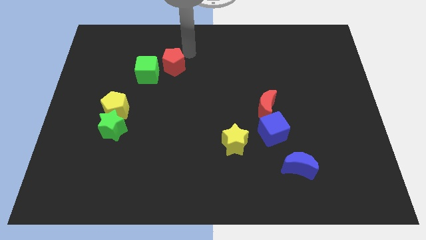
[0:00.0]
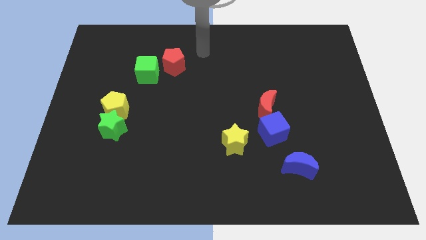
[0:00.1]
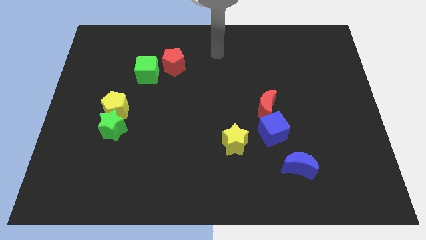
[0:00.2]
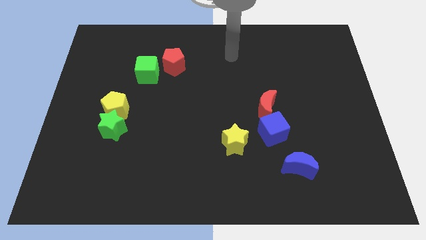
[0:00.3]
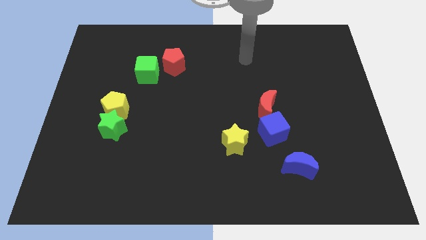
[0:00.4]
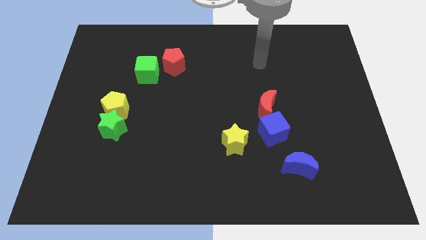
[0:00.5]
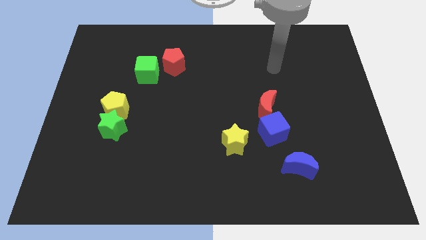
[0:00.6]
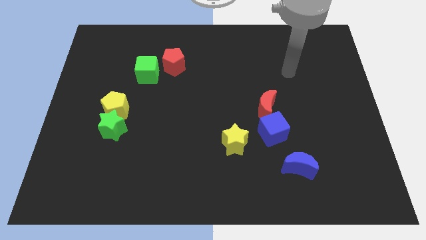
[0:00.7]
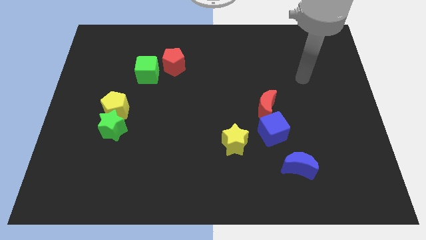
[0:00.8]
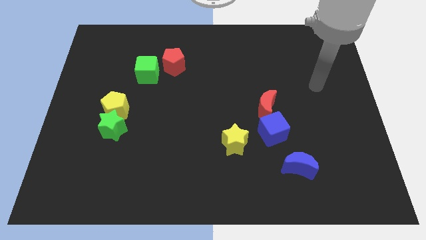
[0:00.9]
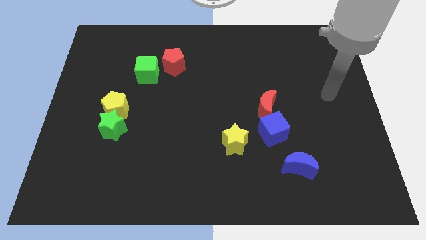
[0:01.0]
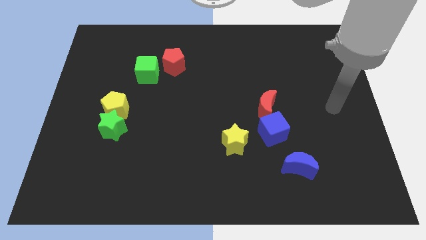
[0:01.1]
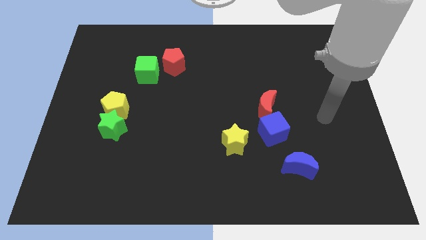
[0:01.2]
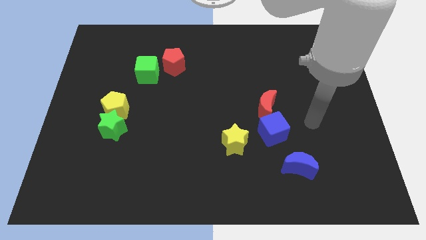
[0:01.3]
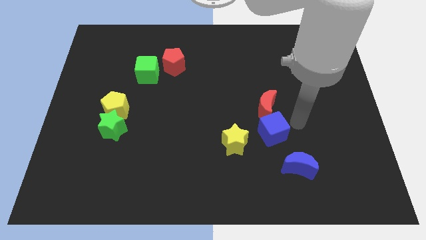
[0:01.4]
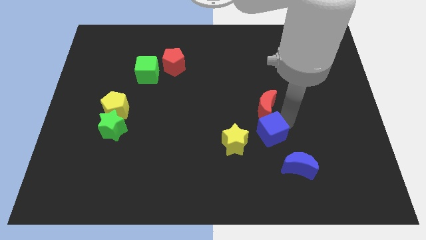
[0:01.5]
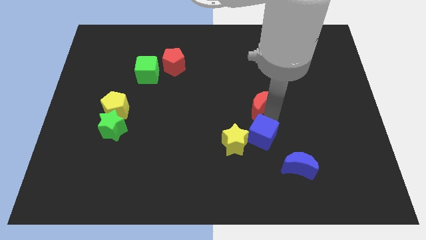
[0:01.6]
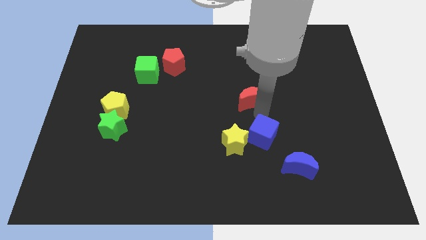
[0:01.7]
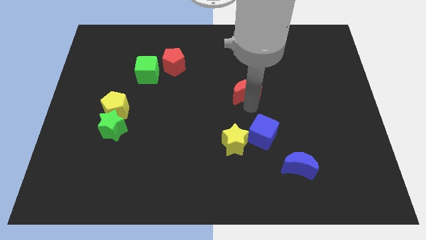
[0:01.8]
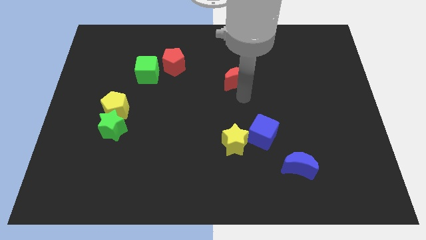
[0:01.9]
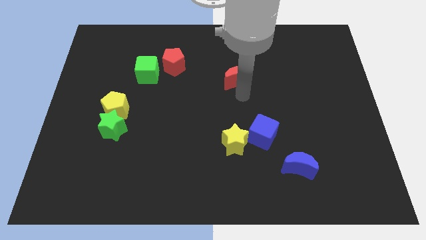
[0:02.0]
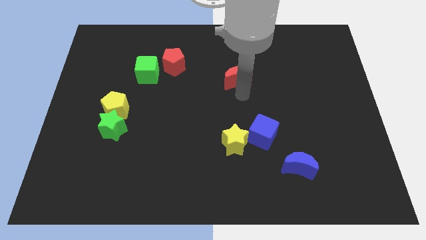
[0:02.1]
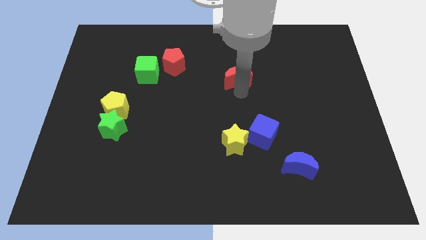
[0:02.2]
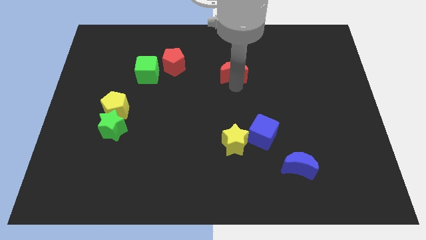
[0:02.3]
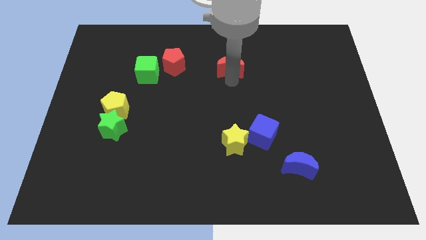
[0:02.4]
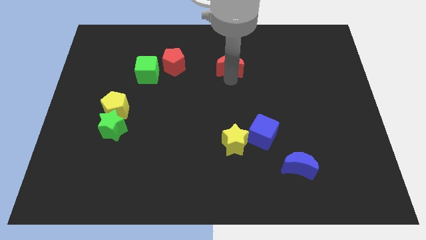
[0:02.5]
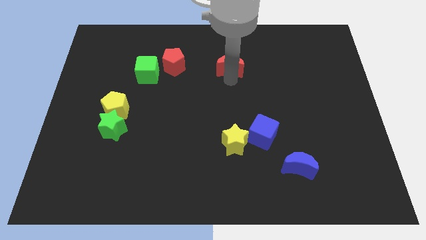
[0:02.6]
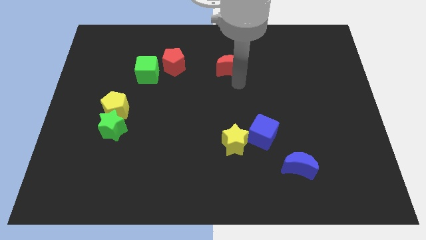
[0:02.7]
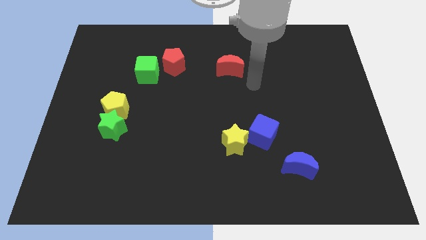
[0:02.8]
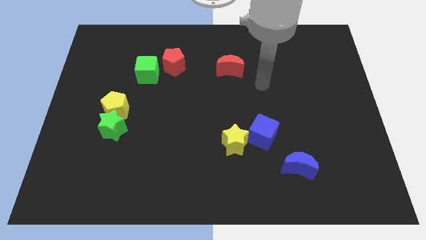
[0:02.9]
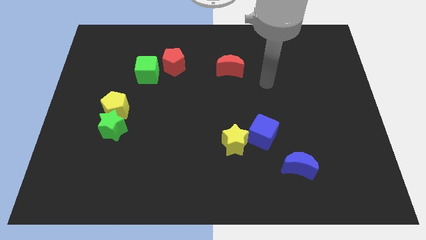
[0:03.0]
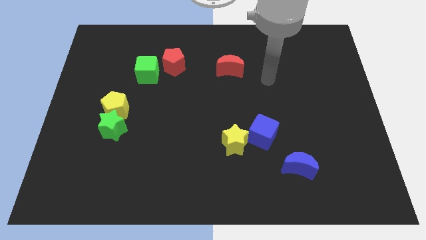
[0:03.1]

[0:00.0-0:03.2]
move the red crescent to the right of the red pentagon

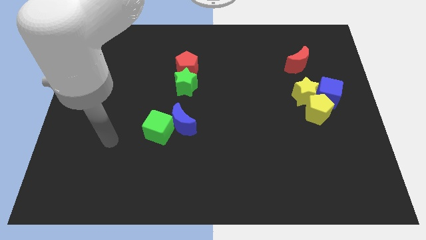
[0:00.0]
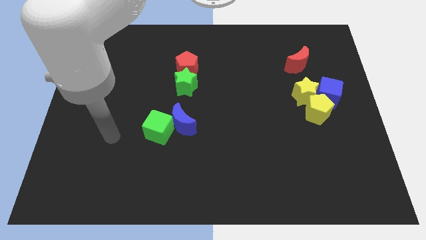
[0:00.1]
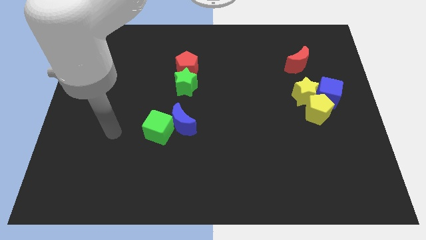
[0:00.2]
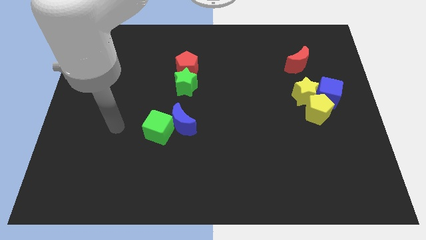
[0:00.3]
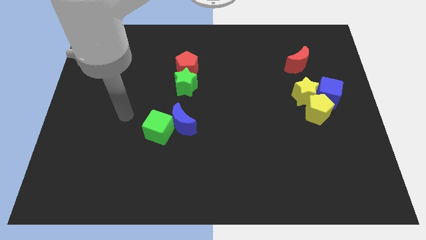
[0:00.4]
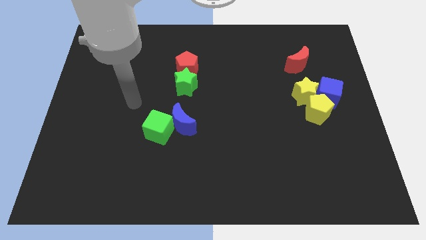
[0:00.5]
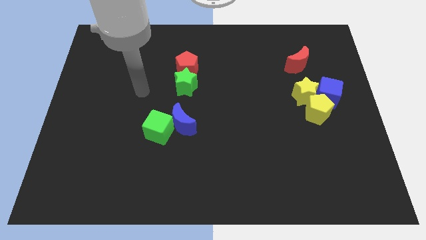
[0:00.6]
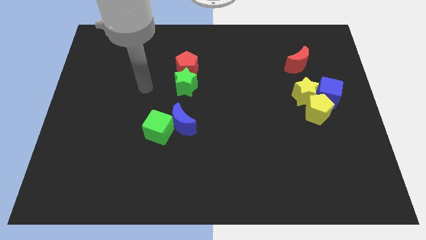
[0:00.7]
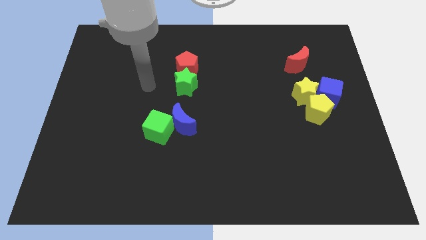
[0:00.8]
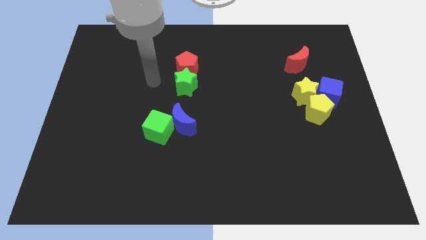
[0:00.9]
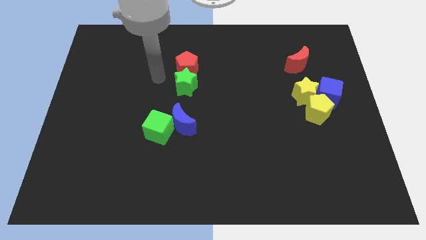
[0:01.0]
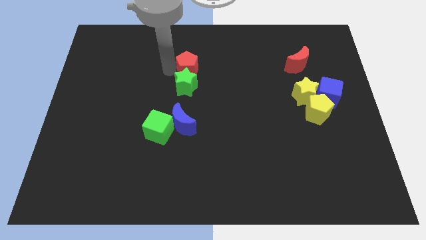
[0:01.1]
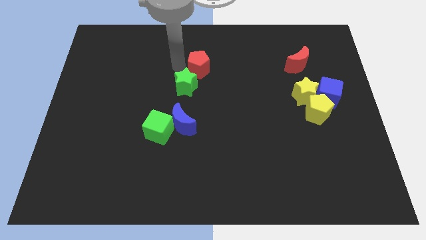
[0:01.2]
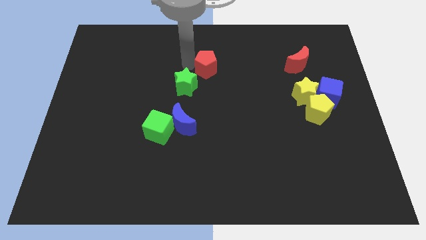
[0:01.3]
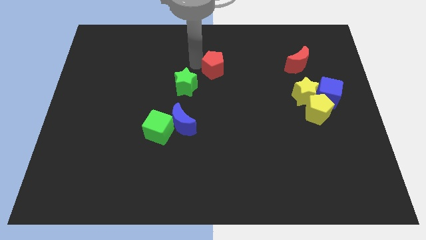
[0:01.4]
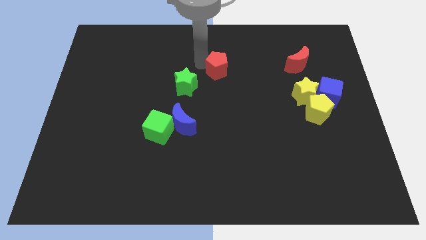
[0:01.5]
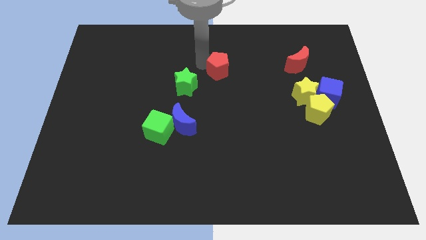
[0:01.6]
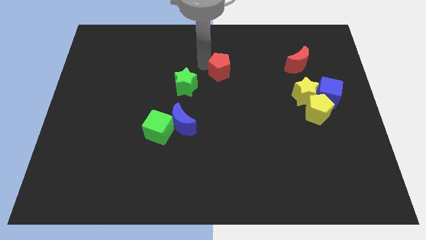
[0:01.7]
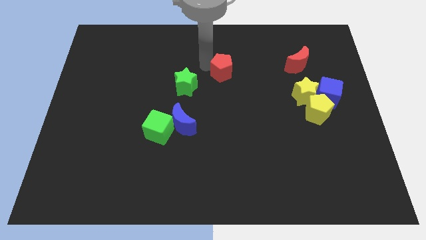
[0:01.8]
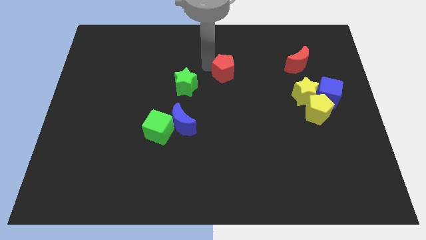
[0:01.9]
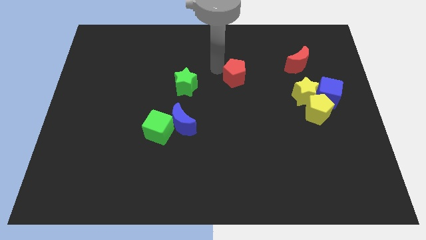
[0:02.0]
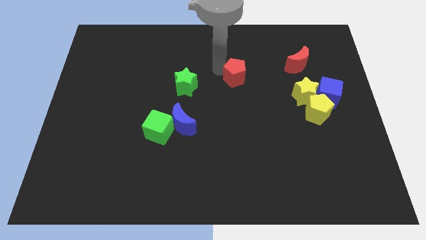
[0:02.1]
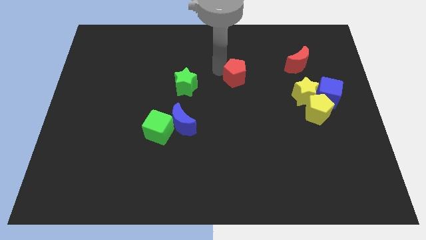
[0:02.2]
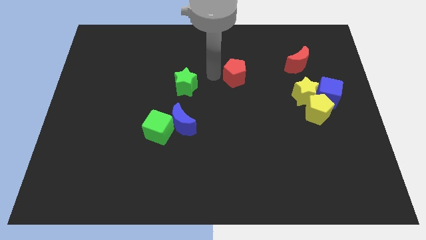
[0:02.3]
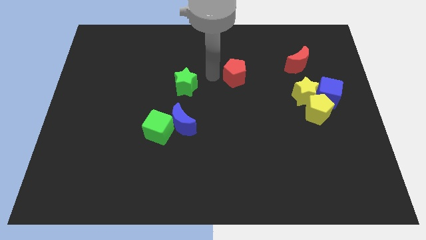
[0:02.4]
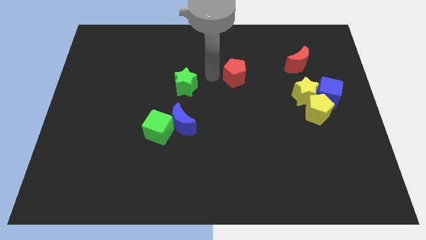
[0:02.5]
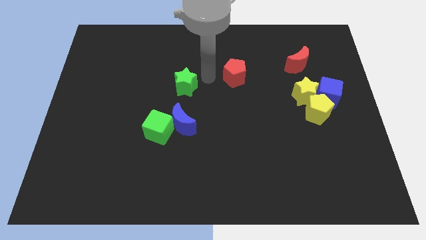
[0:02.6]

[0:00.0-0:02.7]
move red crescent to right of green star

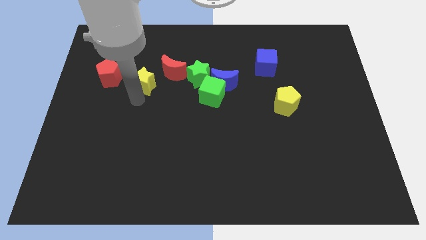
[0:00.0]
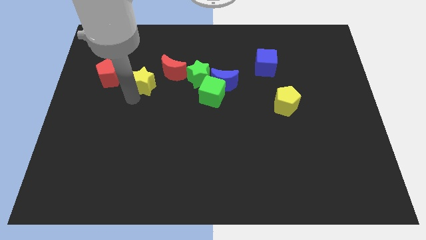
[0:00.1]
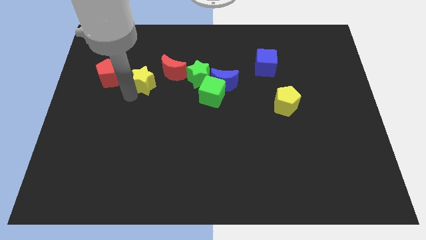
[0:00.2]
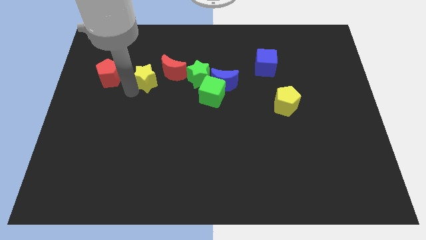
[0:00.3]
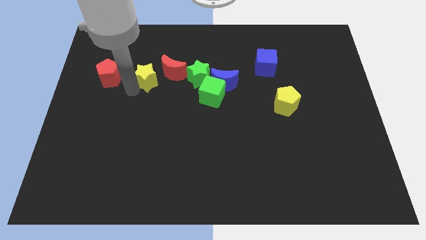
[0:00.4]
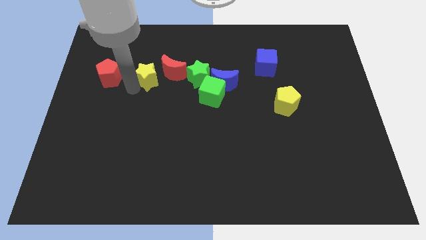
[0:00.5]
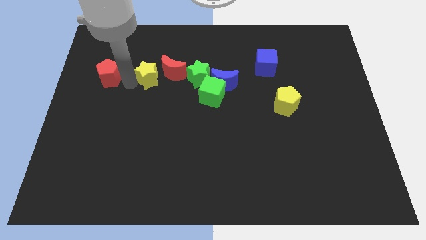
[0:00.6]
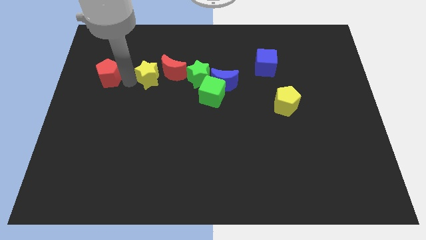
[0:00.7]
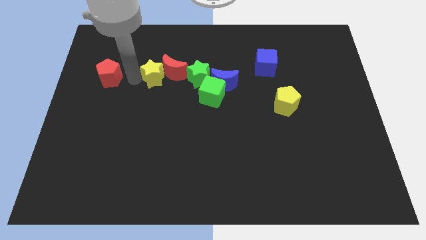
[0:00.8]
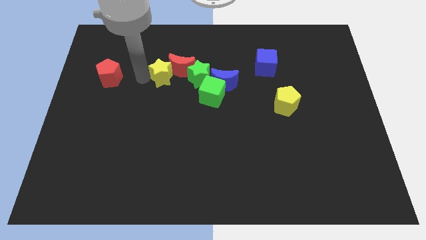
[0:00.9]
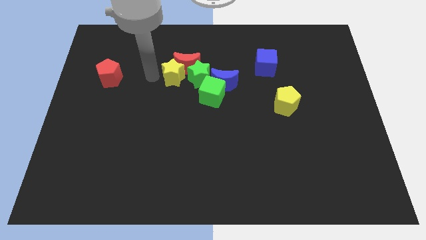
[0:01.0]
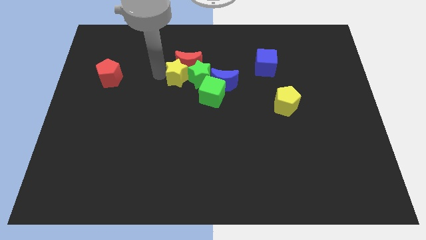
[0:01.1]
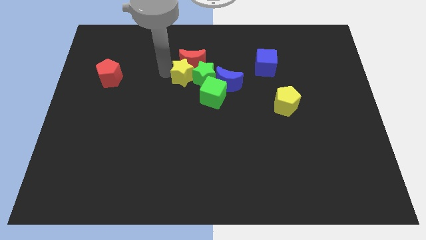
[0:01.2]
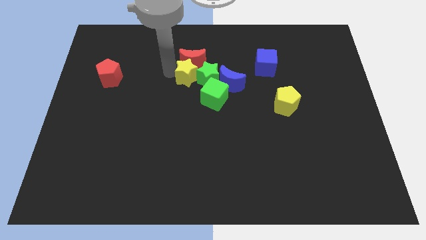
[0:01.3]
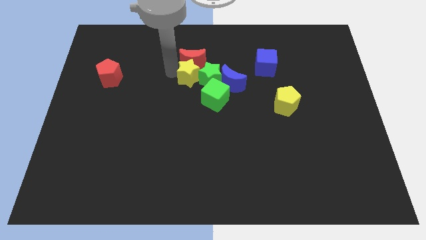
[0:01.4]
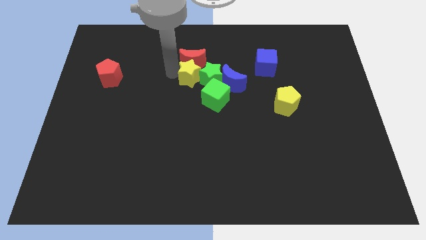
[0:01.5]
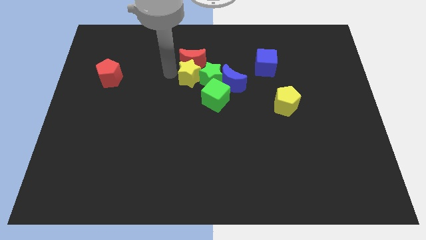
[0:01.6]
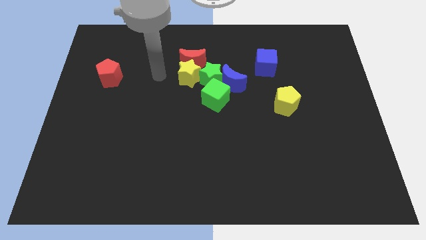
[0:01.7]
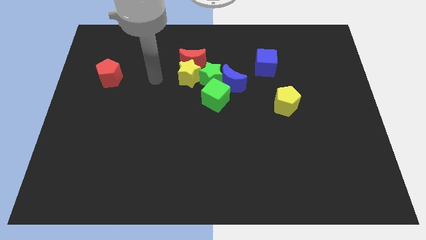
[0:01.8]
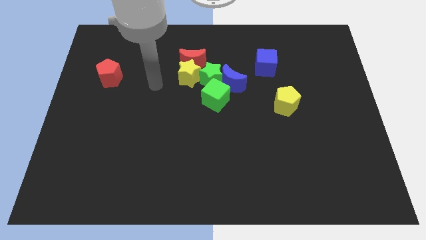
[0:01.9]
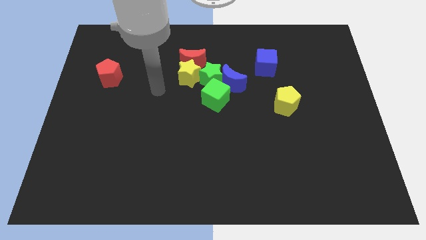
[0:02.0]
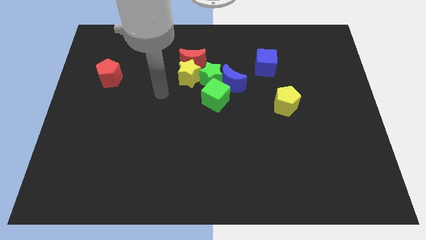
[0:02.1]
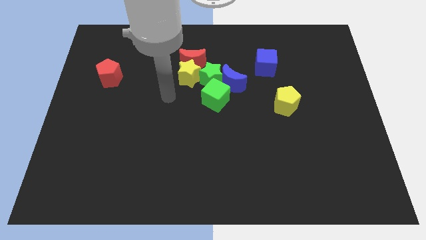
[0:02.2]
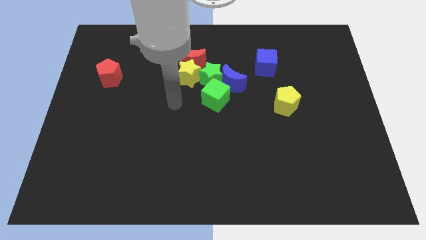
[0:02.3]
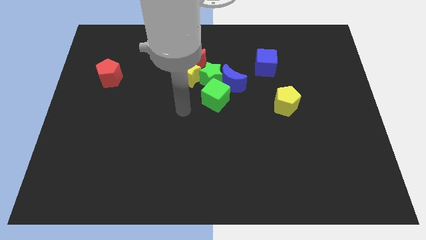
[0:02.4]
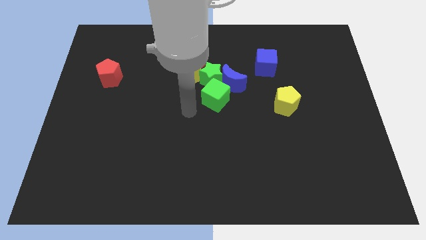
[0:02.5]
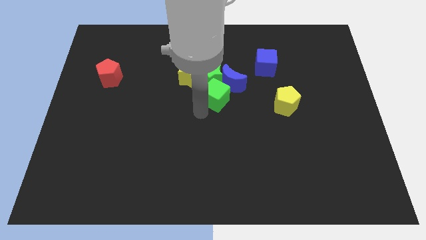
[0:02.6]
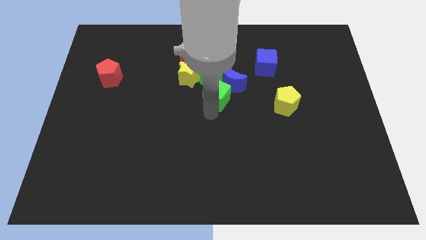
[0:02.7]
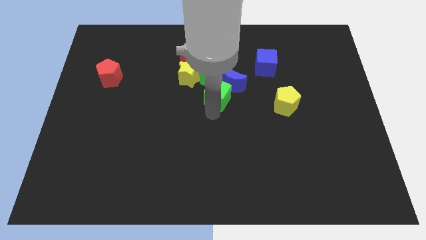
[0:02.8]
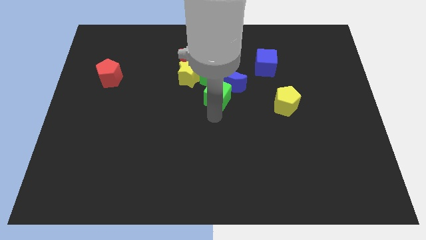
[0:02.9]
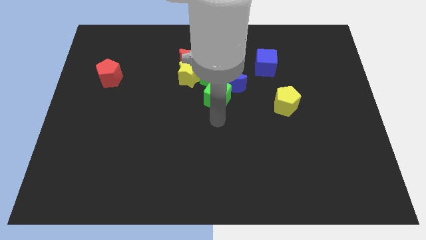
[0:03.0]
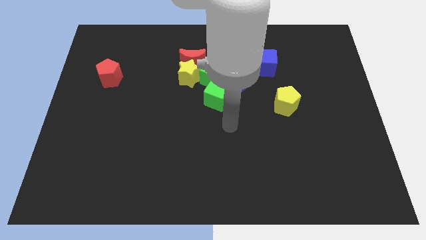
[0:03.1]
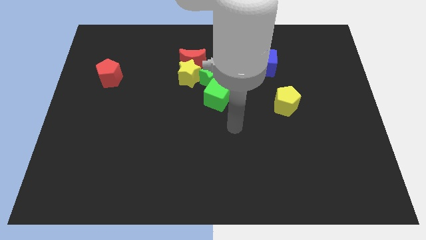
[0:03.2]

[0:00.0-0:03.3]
push the yellow star into the green star
